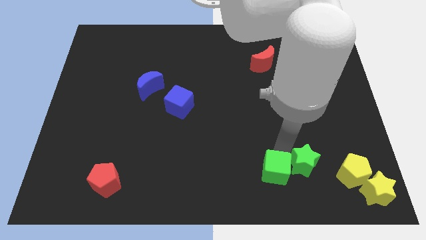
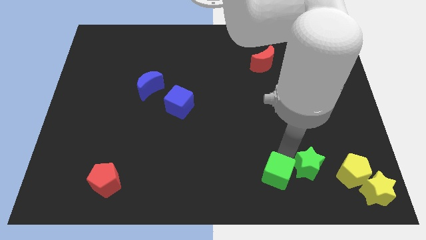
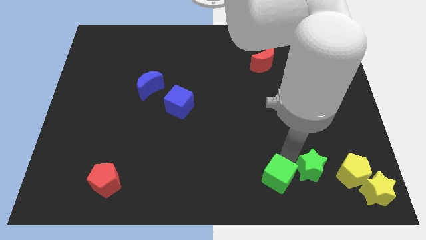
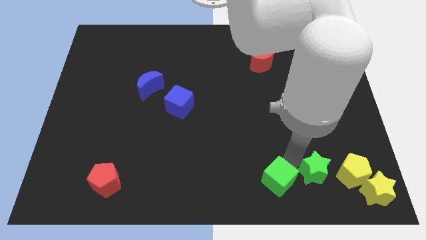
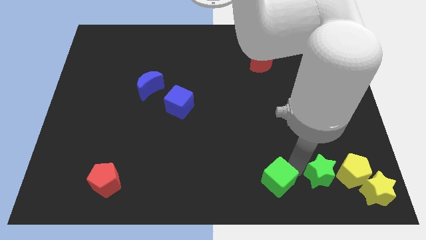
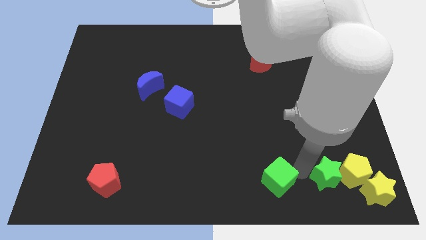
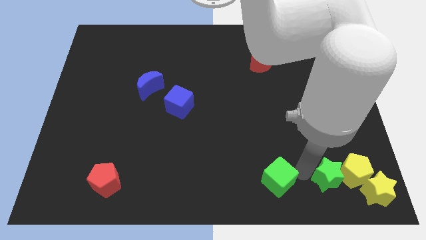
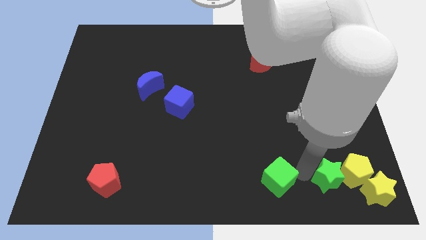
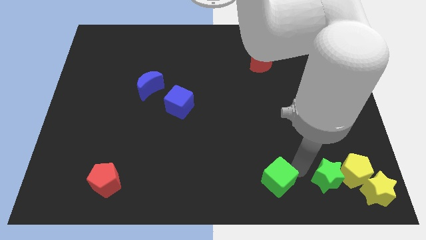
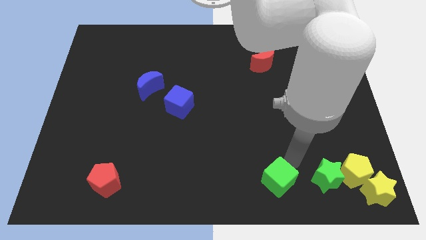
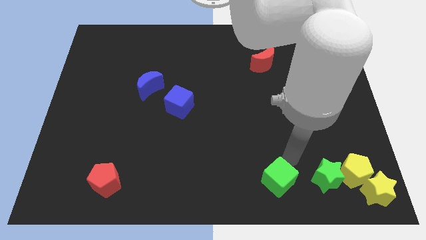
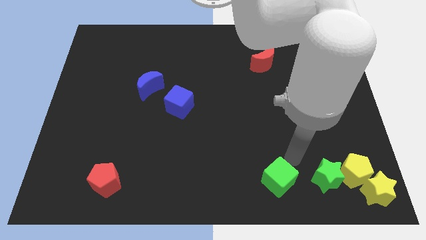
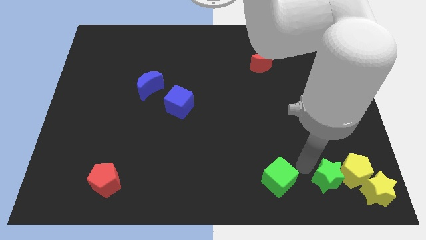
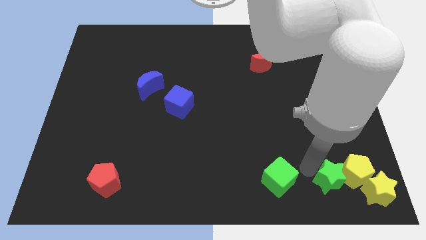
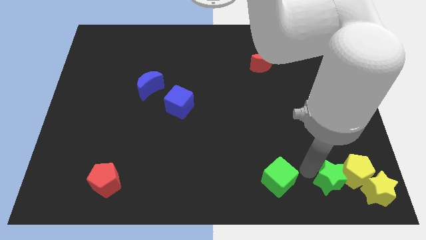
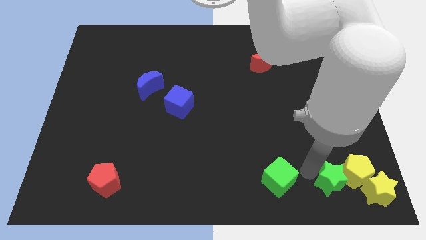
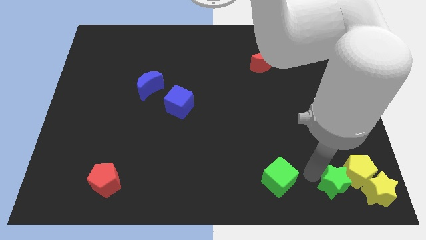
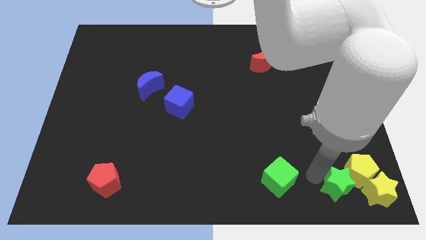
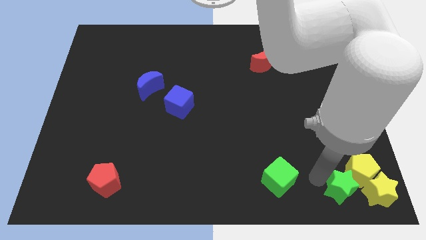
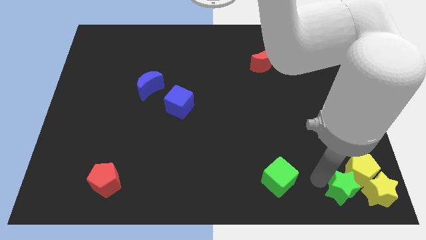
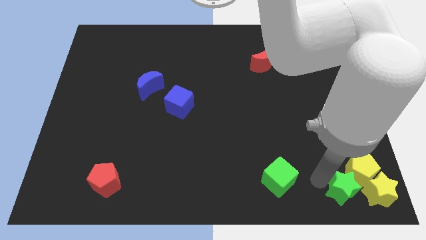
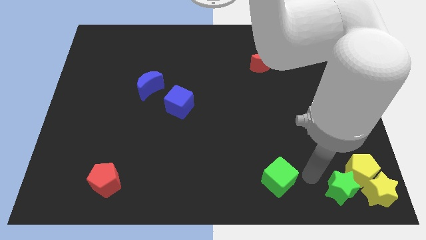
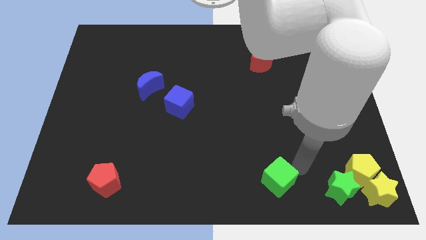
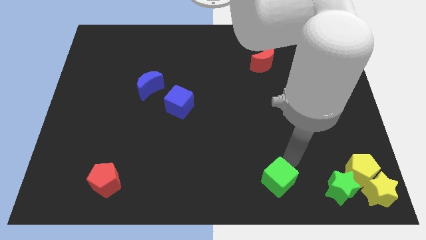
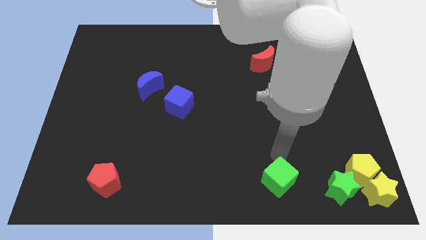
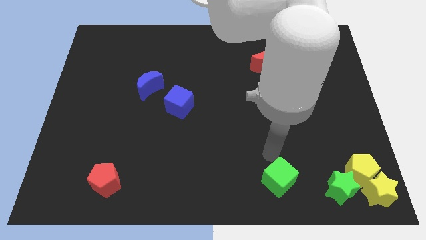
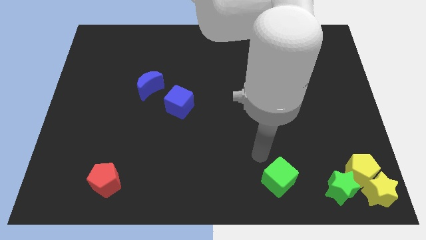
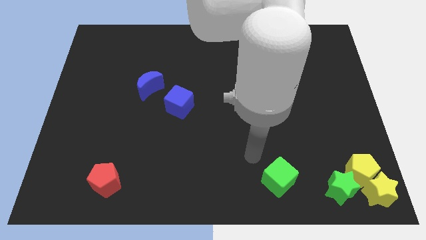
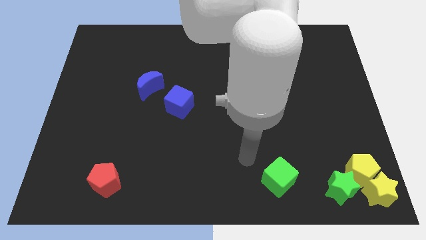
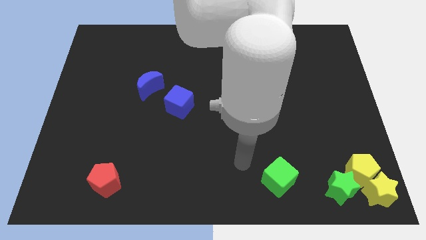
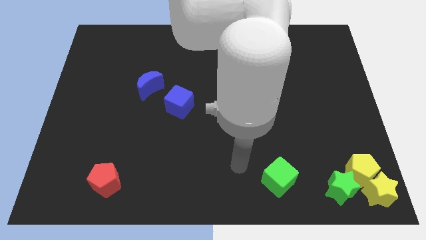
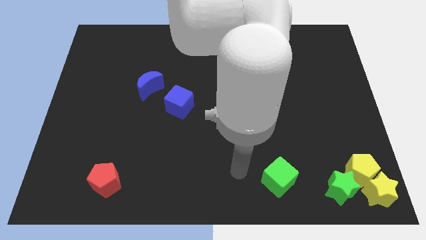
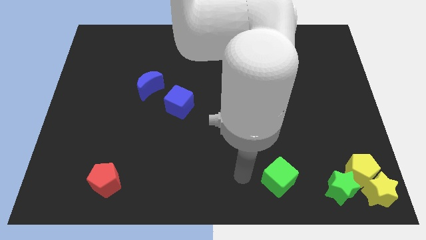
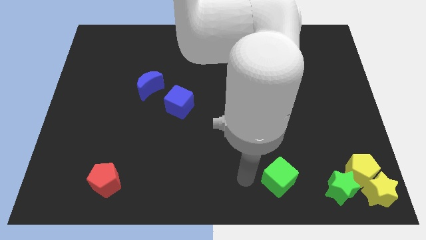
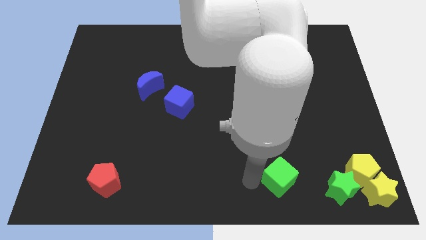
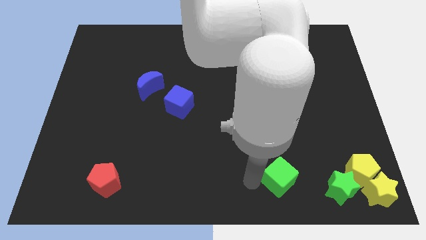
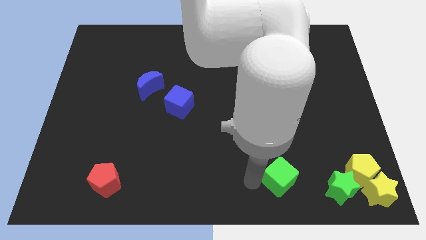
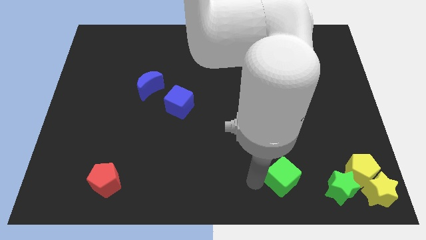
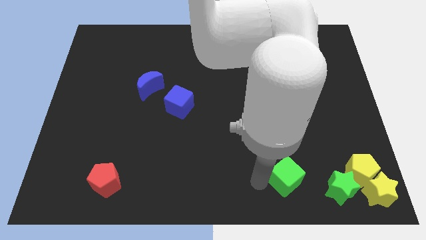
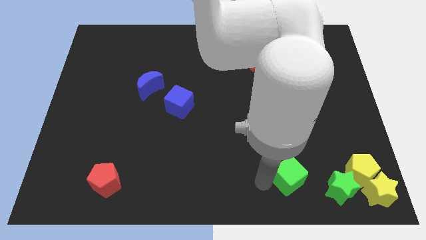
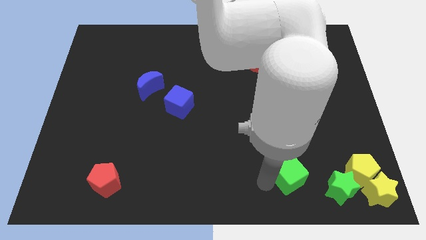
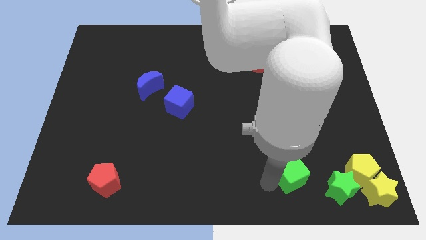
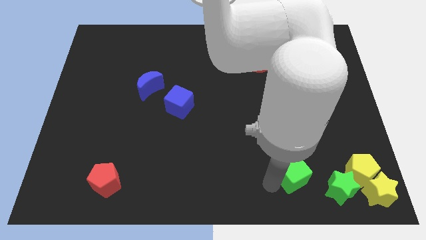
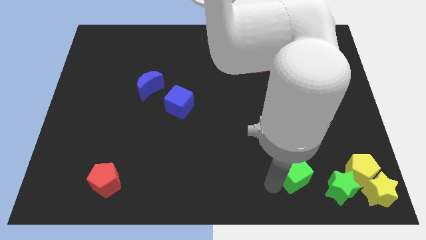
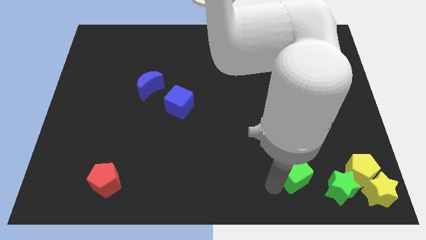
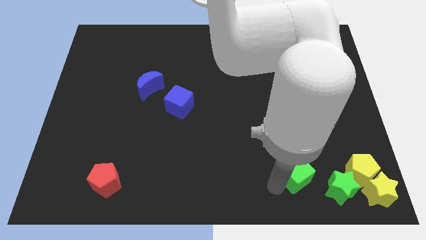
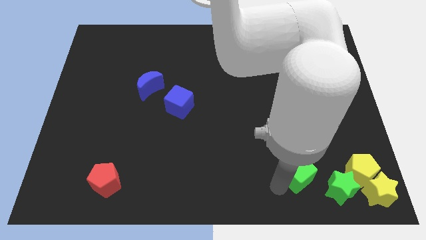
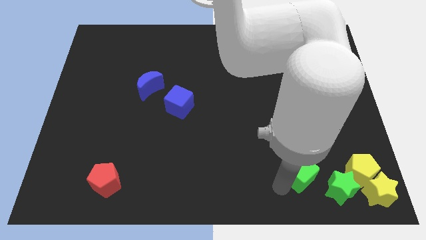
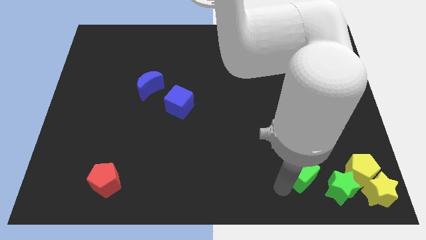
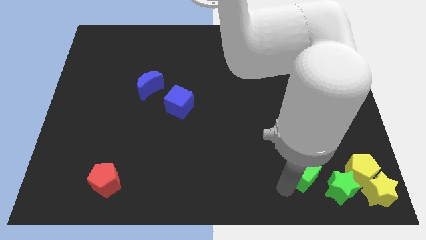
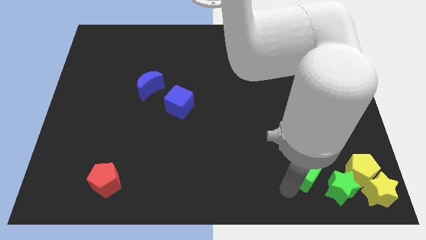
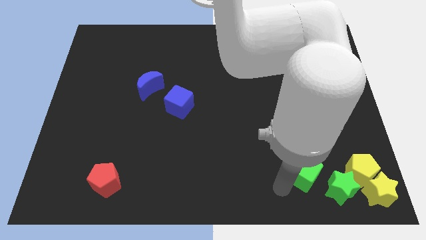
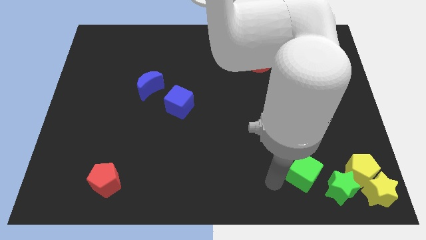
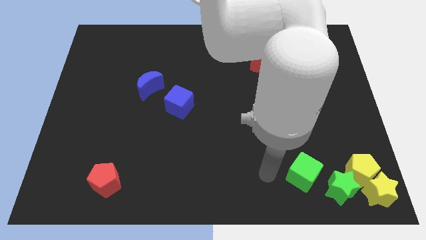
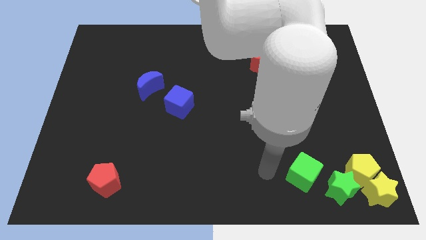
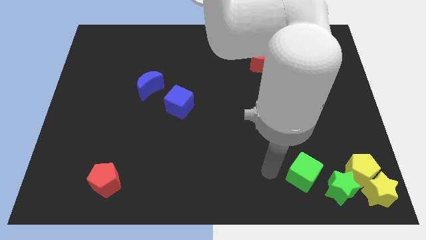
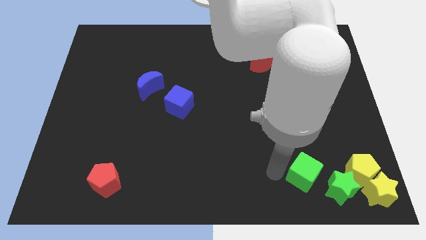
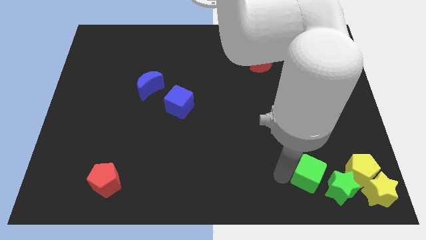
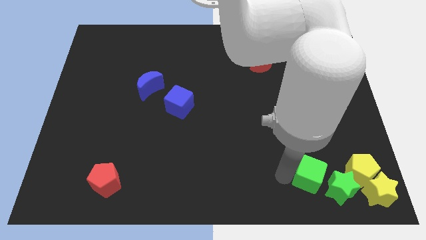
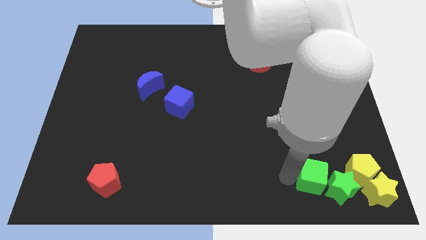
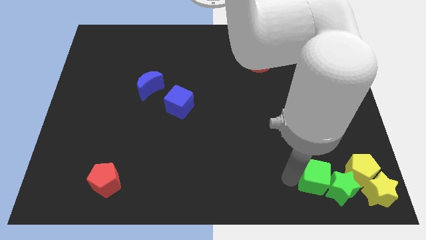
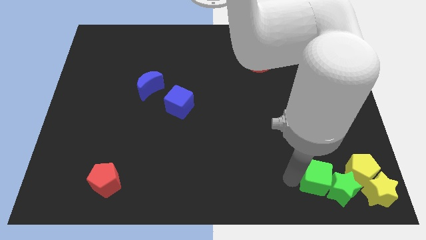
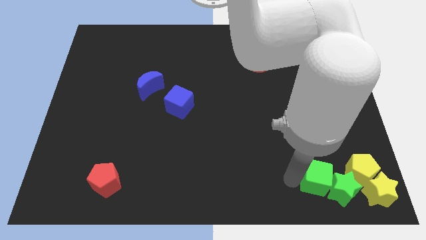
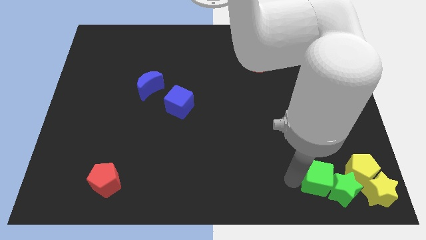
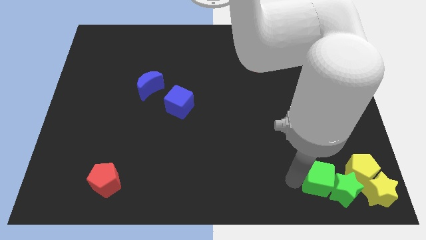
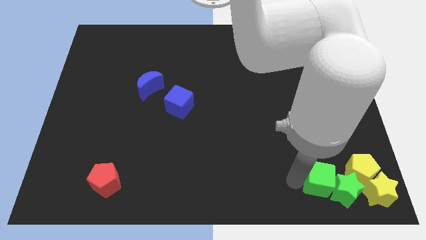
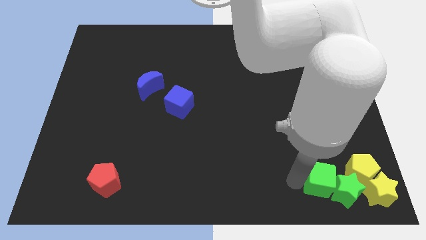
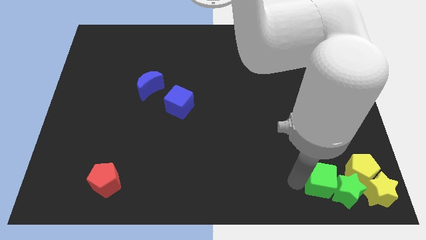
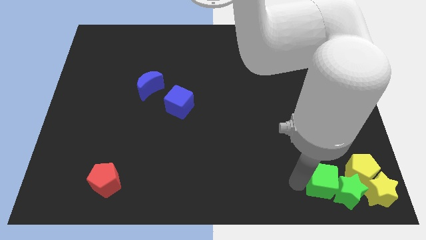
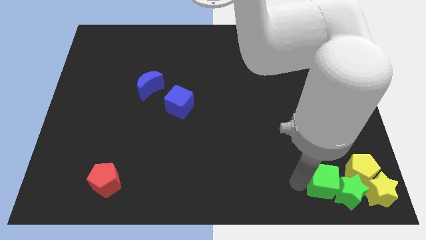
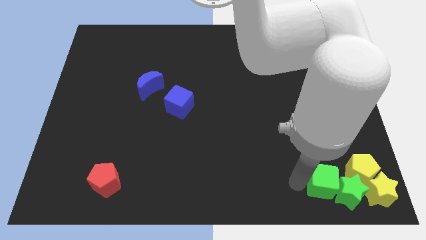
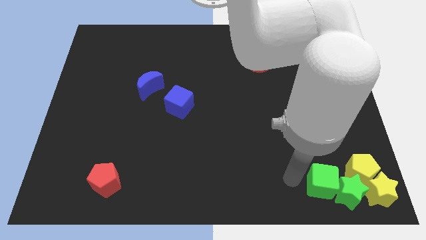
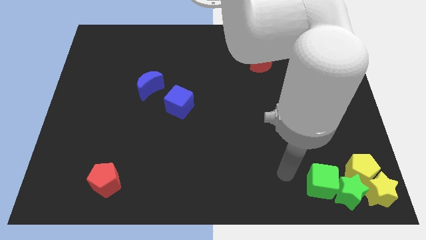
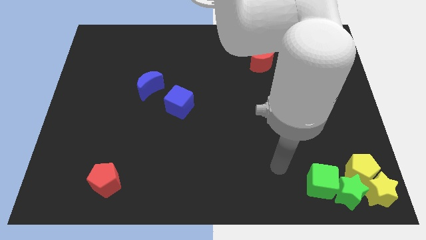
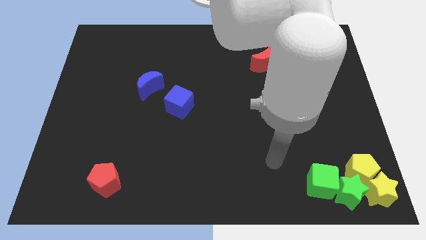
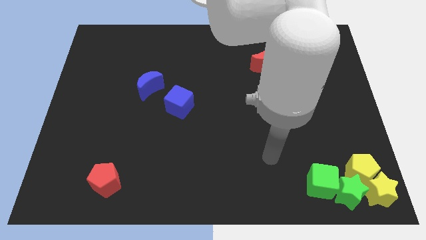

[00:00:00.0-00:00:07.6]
slide both the green blocks to the both yellow blocks

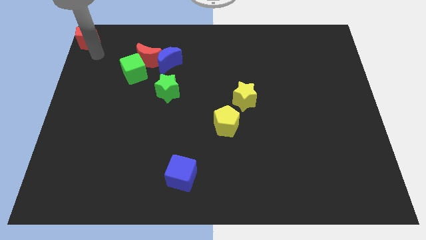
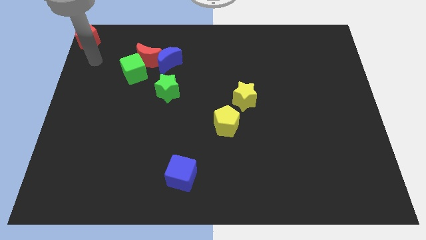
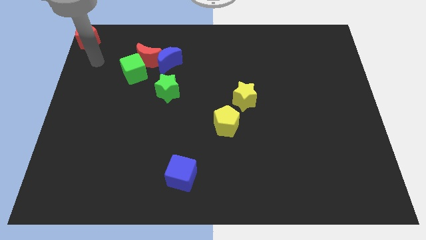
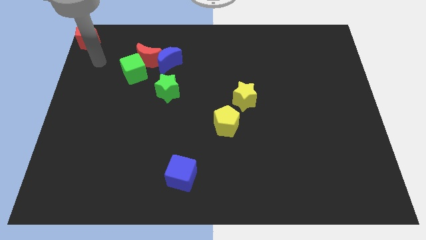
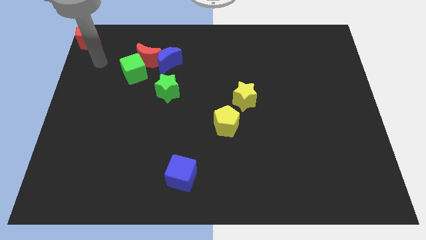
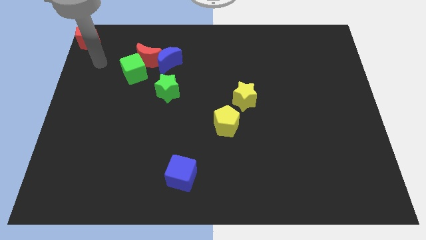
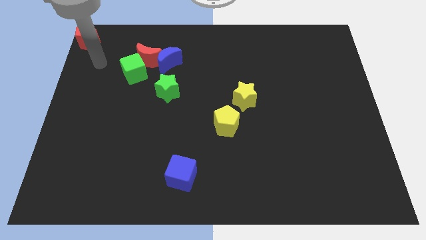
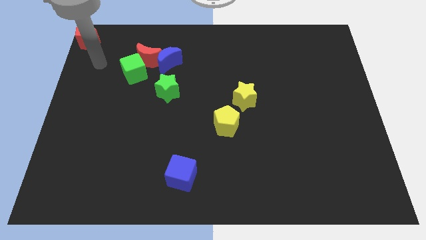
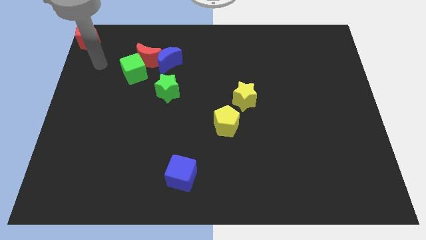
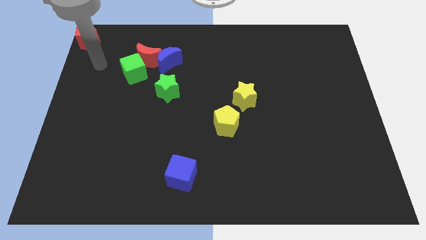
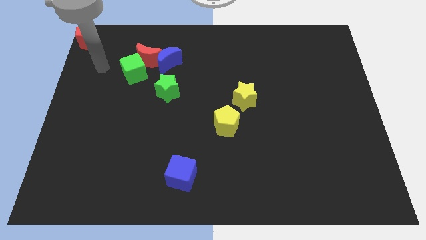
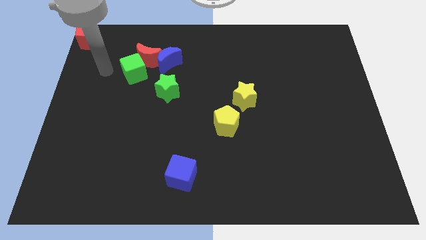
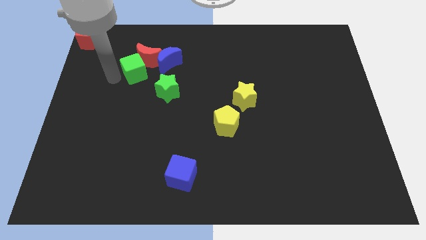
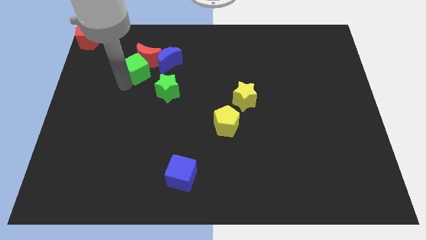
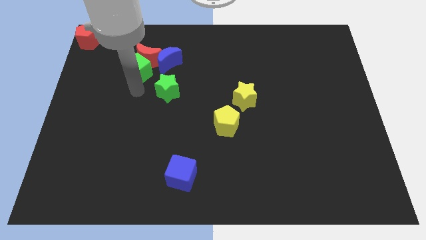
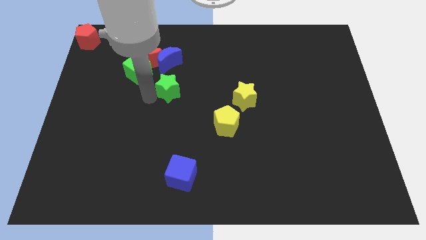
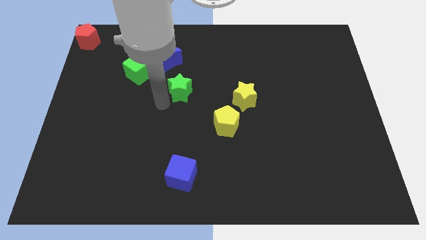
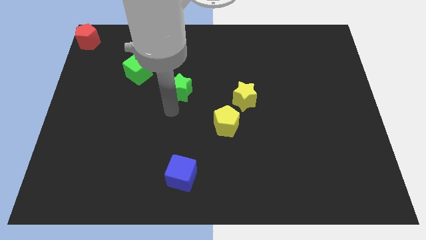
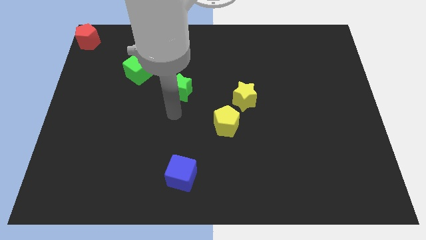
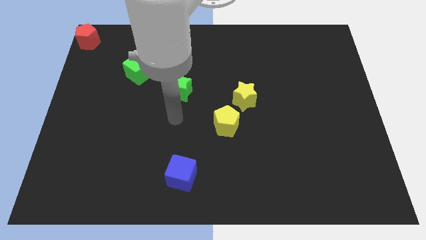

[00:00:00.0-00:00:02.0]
tap green blocks slightly
